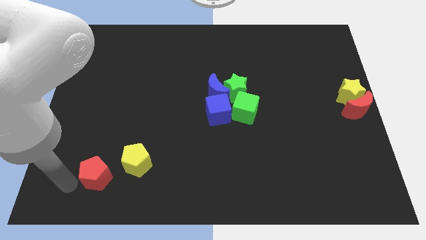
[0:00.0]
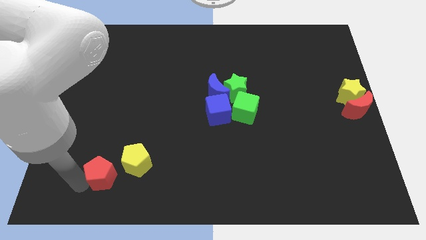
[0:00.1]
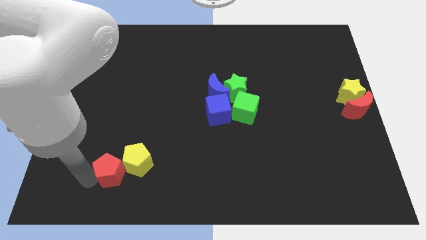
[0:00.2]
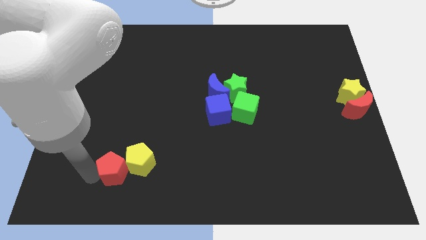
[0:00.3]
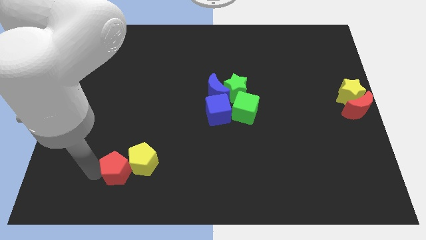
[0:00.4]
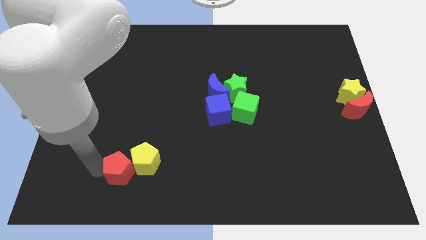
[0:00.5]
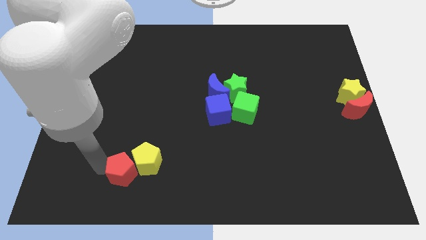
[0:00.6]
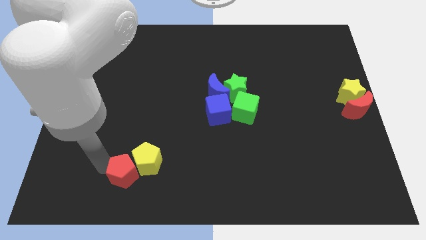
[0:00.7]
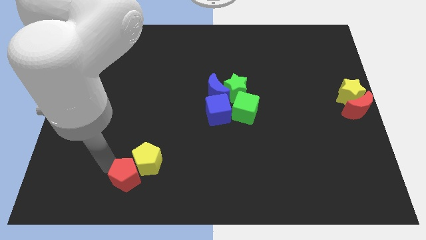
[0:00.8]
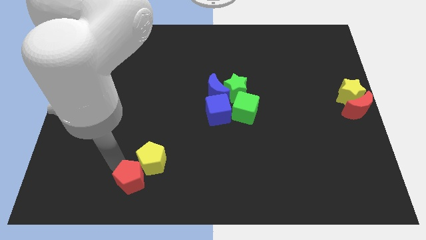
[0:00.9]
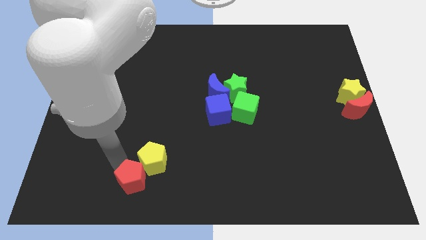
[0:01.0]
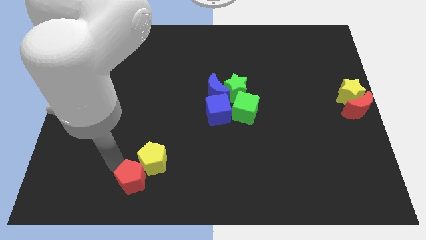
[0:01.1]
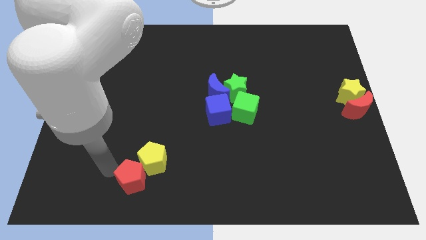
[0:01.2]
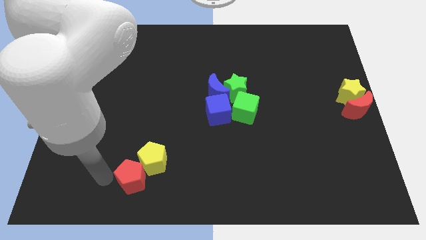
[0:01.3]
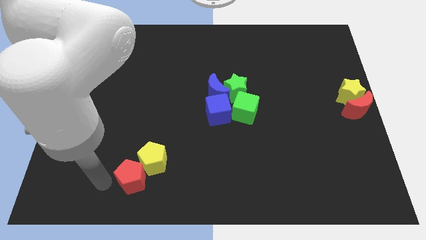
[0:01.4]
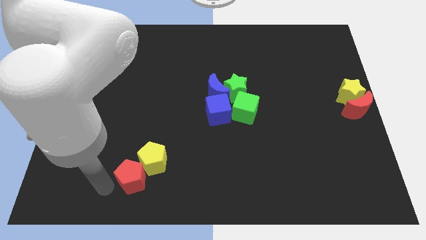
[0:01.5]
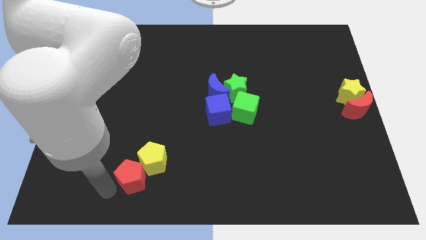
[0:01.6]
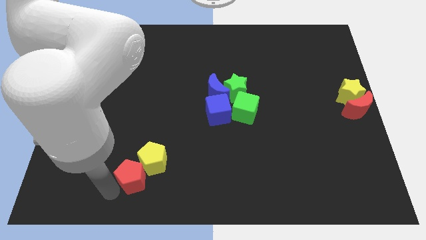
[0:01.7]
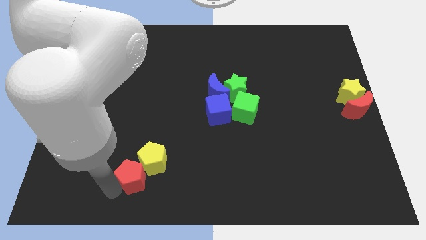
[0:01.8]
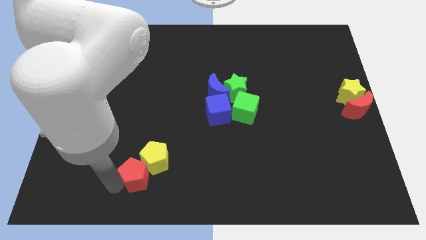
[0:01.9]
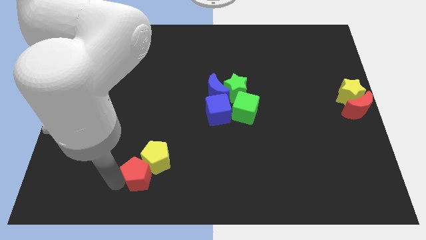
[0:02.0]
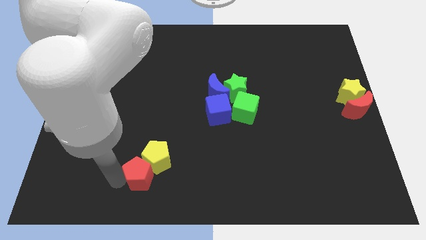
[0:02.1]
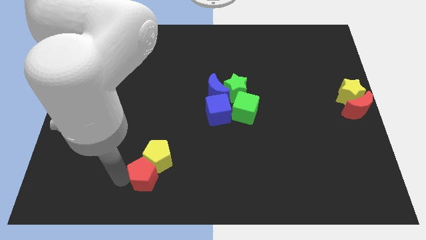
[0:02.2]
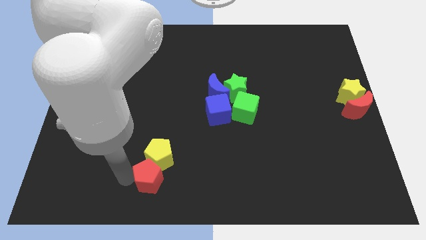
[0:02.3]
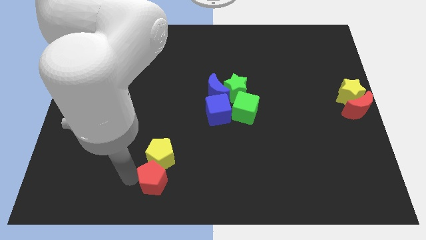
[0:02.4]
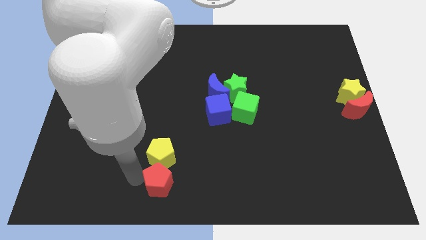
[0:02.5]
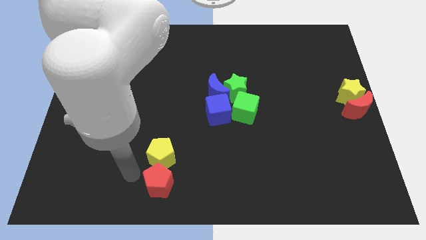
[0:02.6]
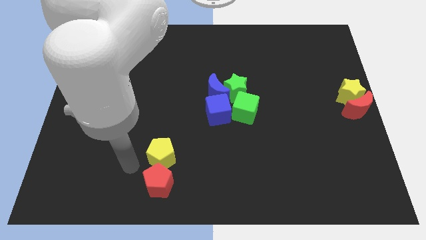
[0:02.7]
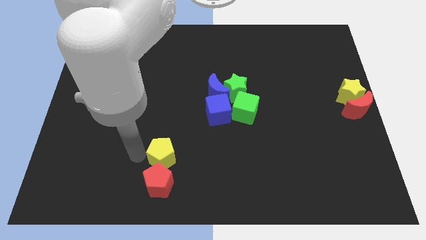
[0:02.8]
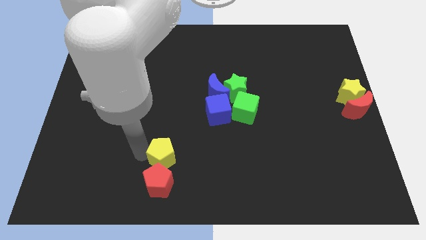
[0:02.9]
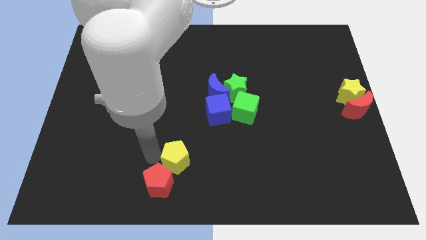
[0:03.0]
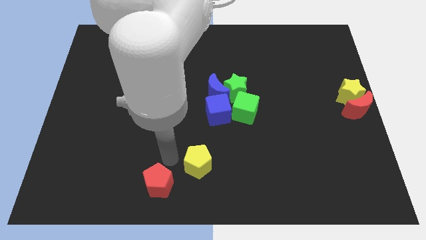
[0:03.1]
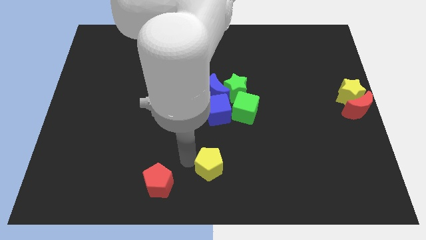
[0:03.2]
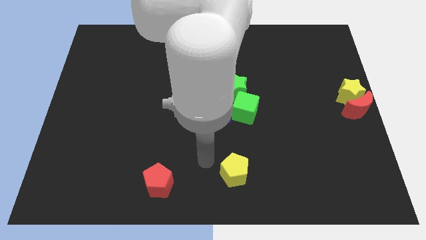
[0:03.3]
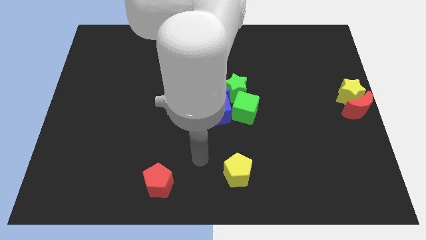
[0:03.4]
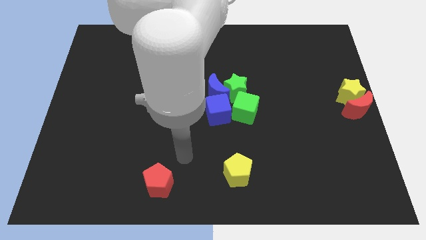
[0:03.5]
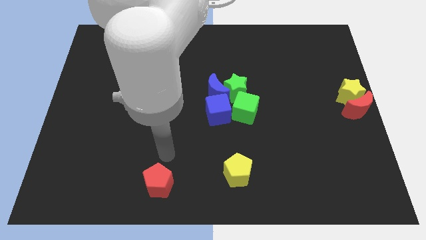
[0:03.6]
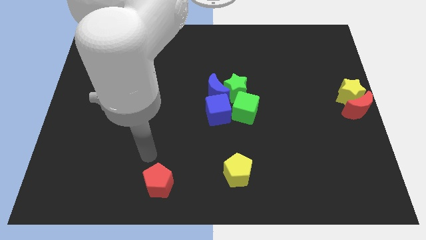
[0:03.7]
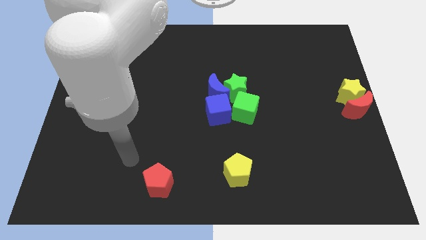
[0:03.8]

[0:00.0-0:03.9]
separate the red pentagon and yellow pentagon

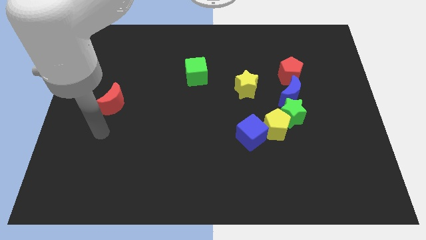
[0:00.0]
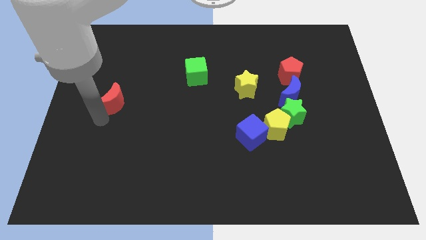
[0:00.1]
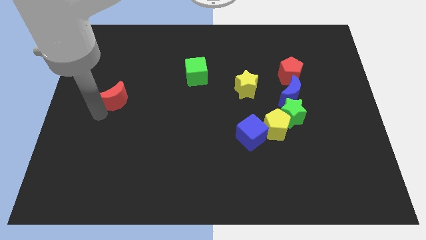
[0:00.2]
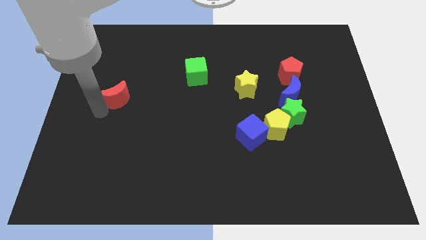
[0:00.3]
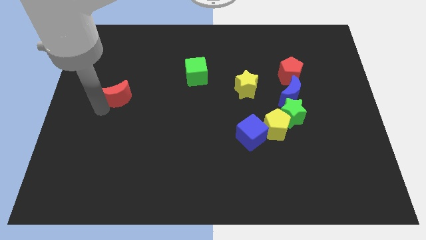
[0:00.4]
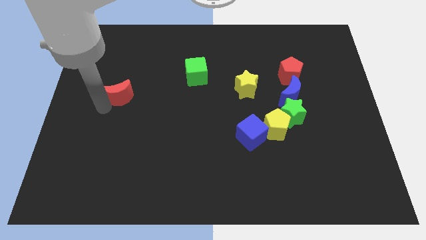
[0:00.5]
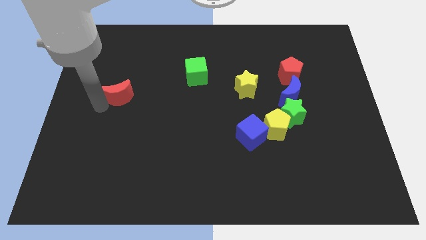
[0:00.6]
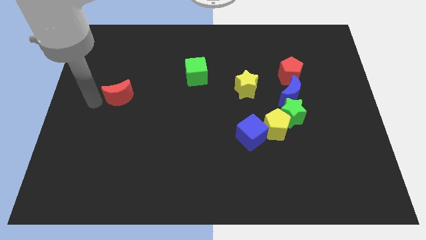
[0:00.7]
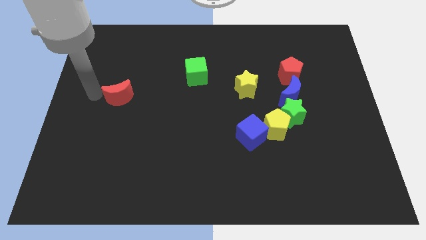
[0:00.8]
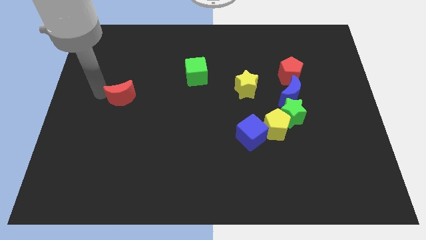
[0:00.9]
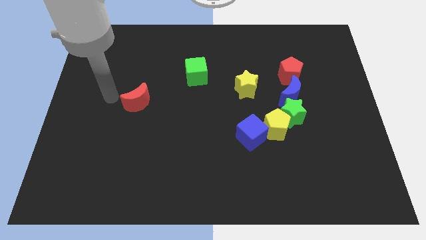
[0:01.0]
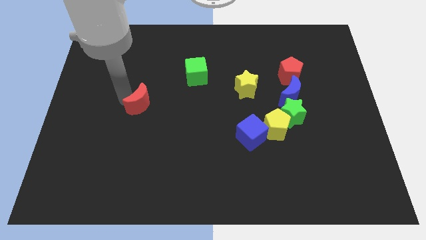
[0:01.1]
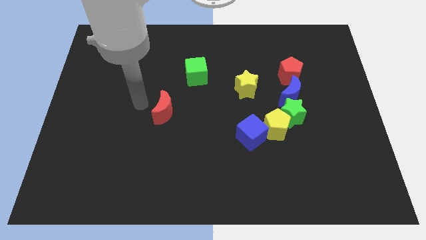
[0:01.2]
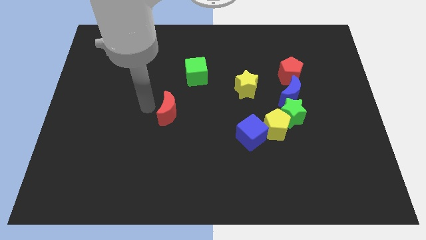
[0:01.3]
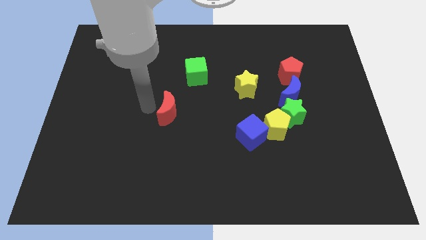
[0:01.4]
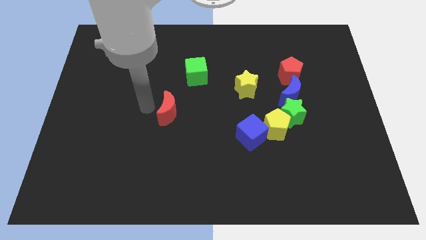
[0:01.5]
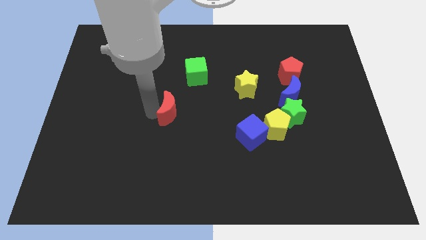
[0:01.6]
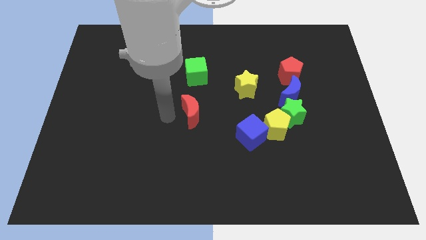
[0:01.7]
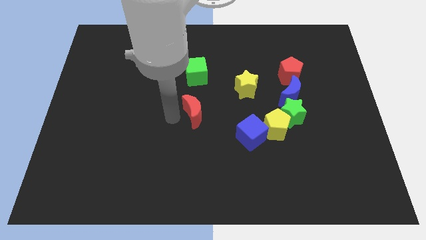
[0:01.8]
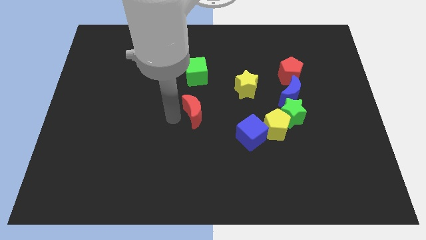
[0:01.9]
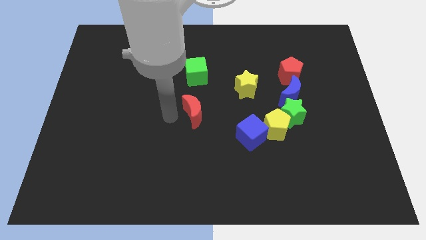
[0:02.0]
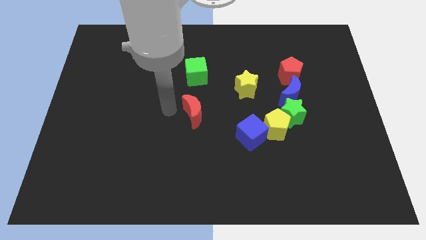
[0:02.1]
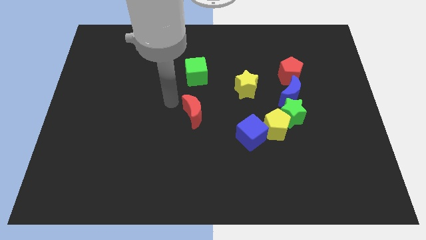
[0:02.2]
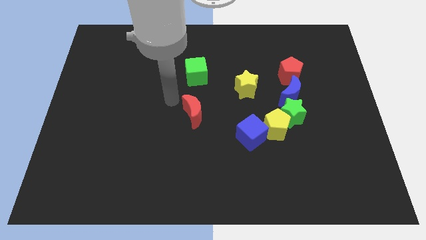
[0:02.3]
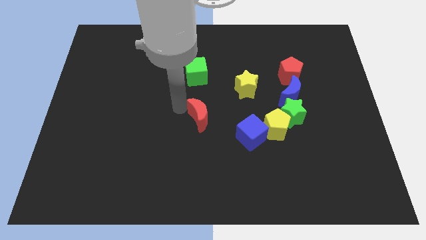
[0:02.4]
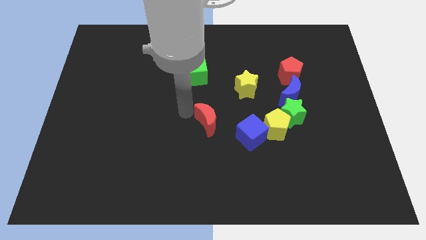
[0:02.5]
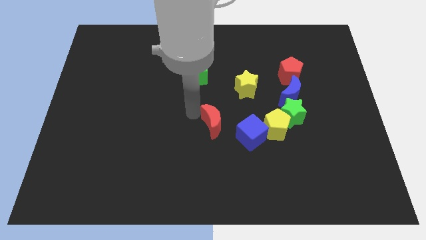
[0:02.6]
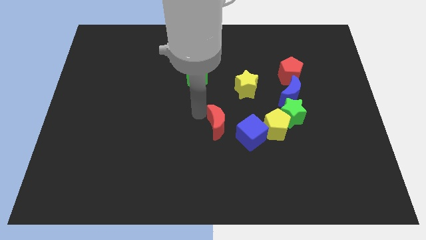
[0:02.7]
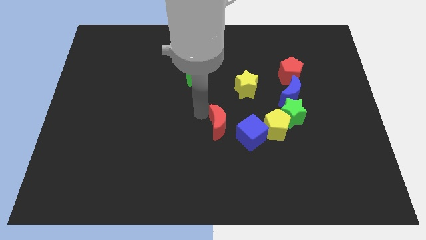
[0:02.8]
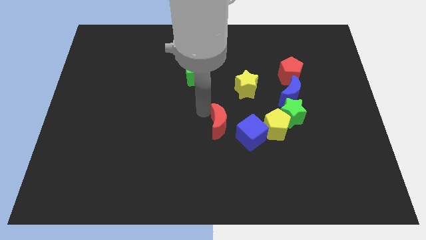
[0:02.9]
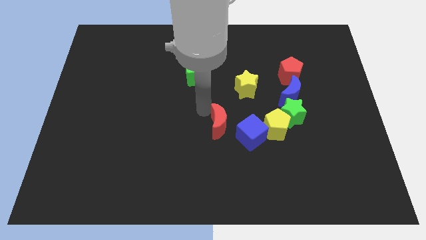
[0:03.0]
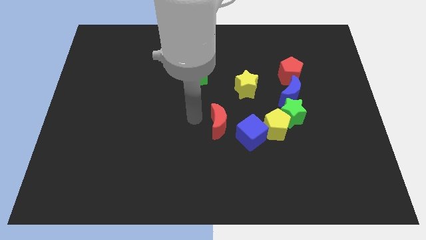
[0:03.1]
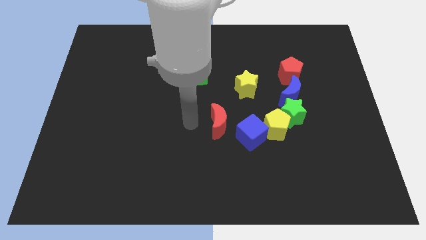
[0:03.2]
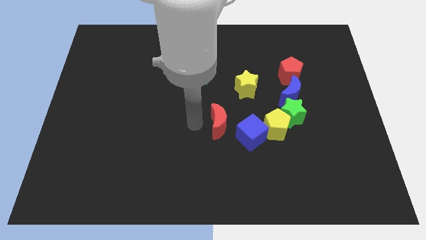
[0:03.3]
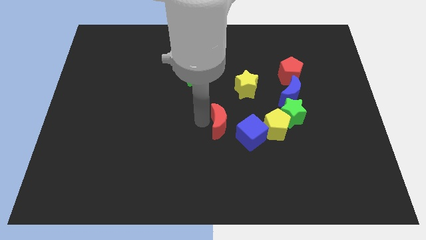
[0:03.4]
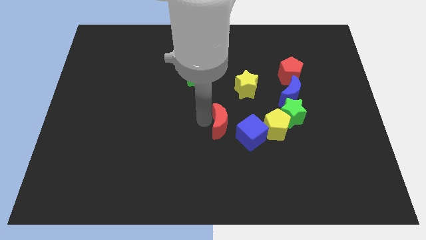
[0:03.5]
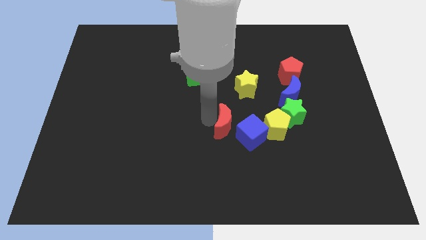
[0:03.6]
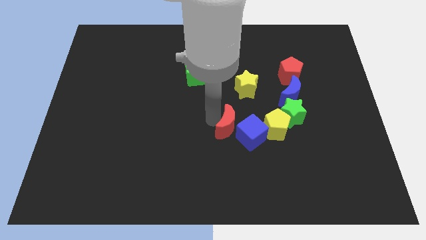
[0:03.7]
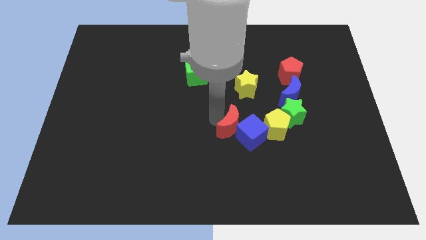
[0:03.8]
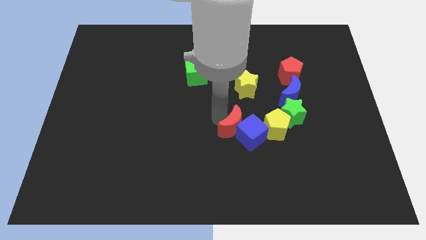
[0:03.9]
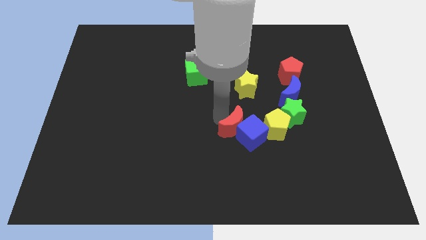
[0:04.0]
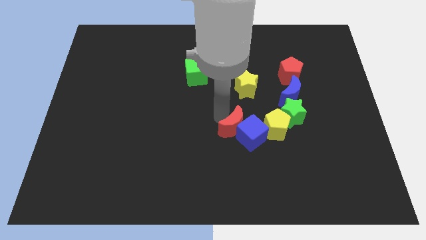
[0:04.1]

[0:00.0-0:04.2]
push red half move to center

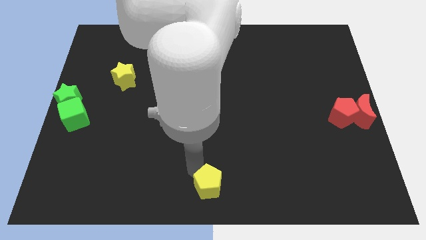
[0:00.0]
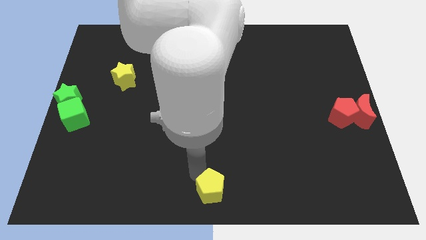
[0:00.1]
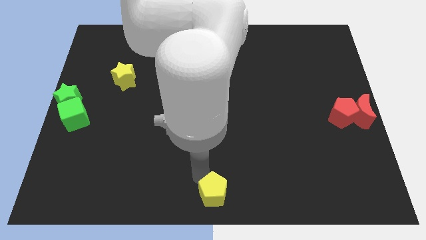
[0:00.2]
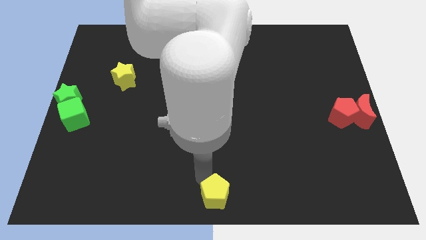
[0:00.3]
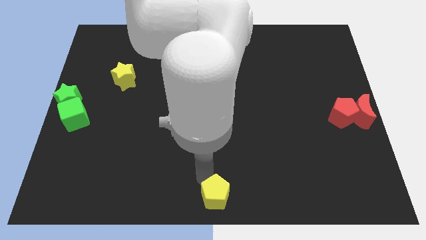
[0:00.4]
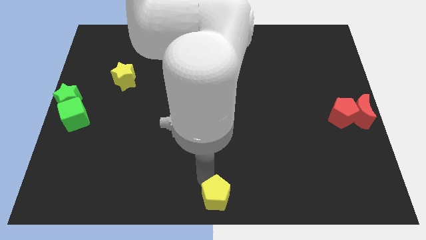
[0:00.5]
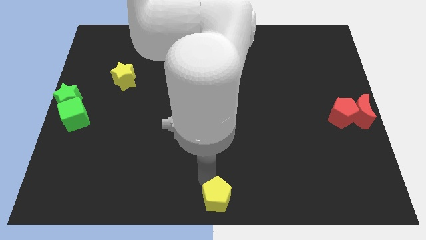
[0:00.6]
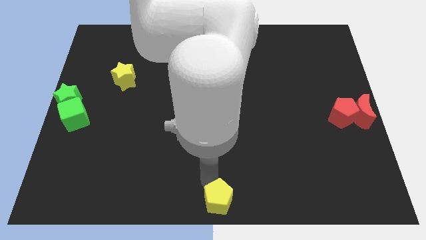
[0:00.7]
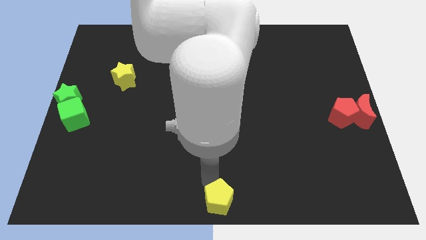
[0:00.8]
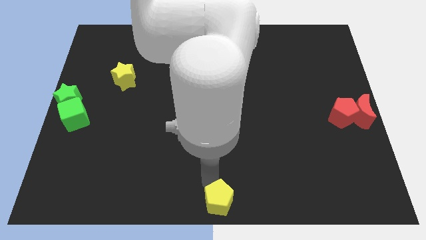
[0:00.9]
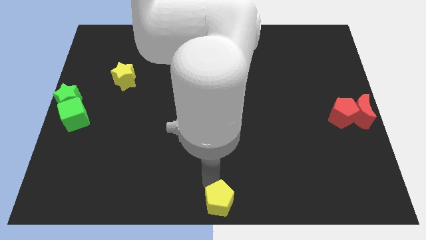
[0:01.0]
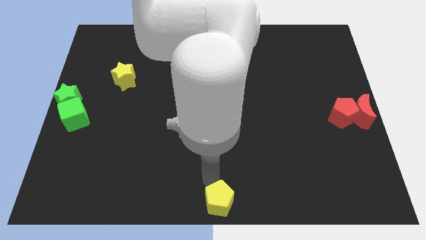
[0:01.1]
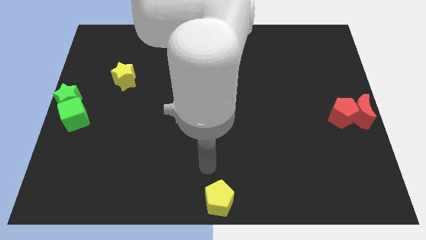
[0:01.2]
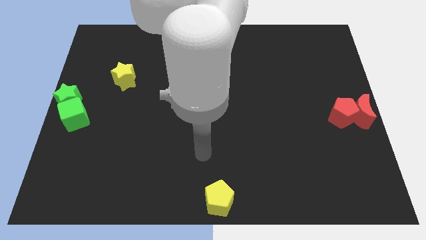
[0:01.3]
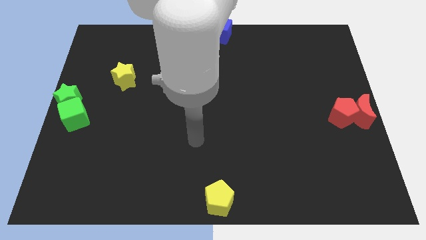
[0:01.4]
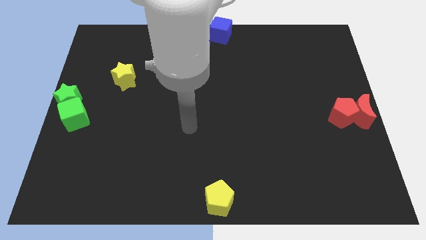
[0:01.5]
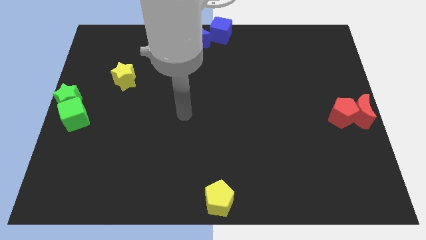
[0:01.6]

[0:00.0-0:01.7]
push the yellow pentagon to the bottom centre of the board
